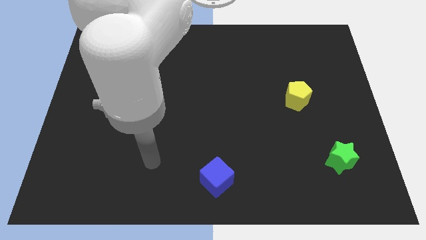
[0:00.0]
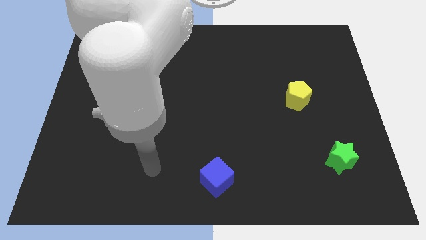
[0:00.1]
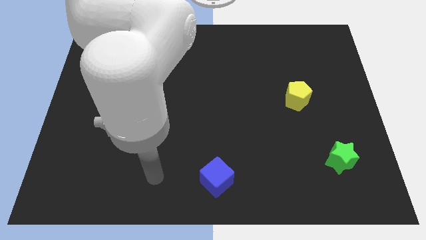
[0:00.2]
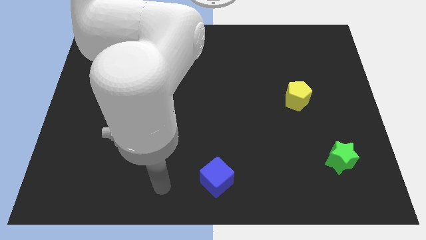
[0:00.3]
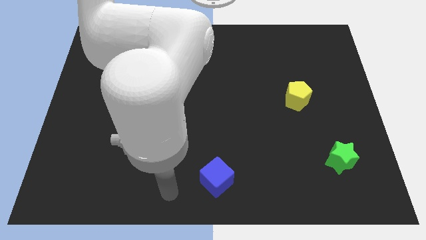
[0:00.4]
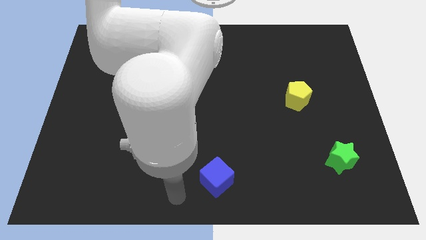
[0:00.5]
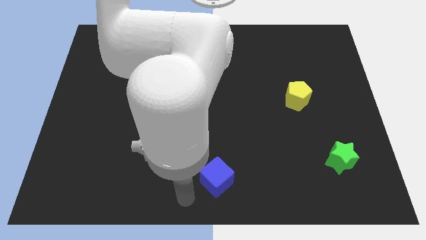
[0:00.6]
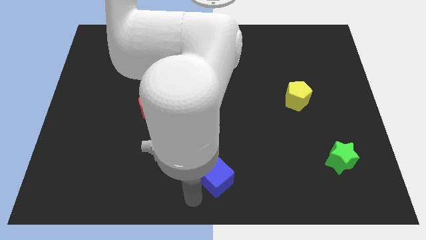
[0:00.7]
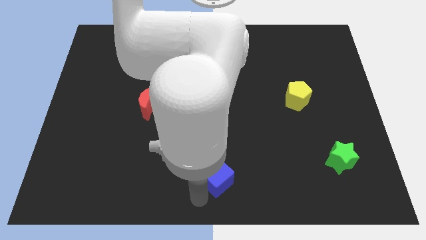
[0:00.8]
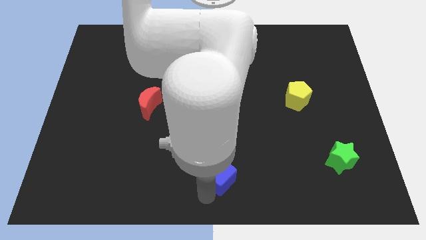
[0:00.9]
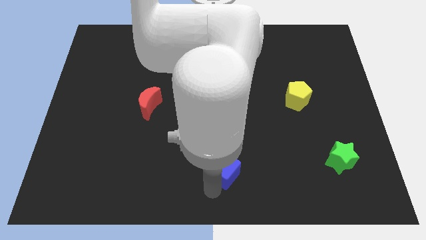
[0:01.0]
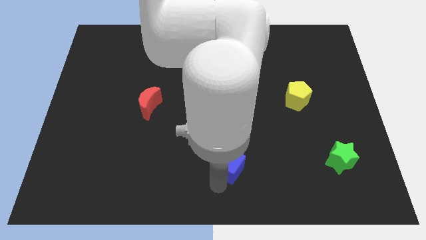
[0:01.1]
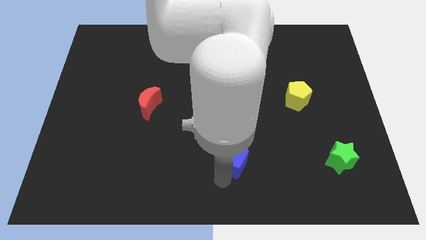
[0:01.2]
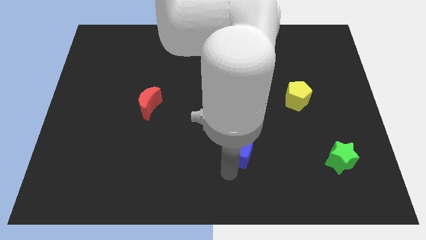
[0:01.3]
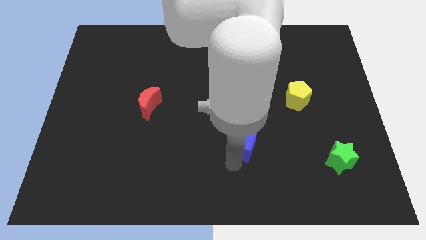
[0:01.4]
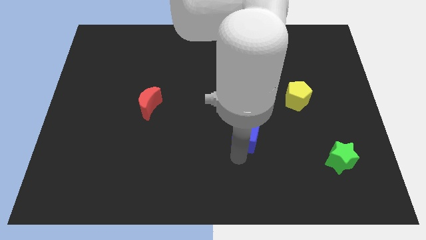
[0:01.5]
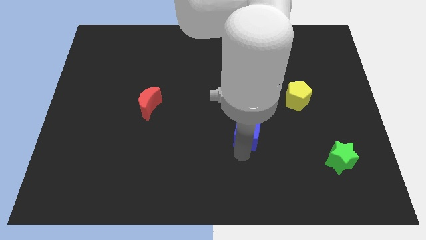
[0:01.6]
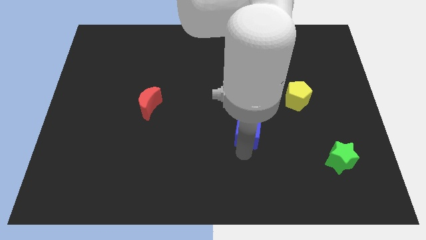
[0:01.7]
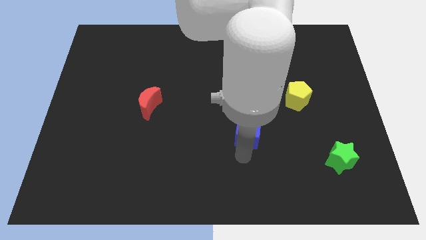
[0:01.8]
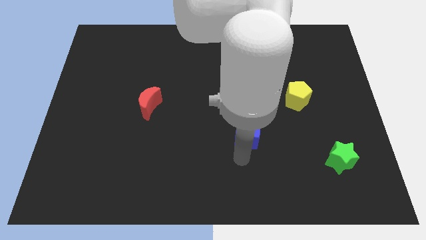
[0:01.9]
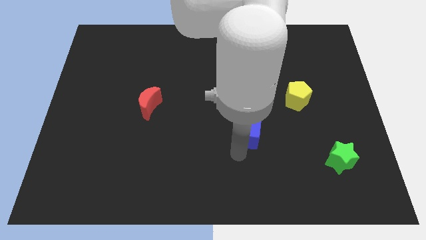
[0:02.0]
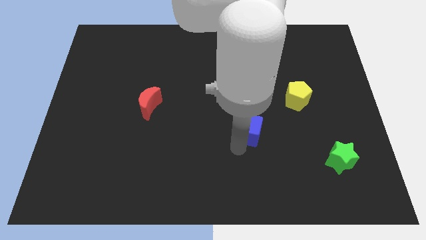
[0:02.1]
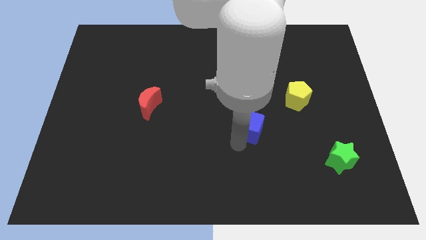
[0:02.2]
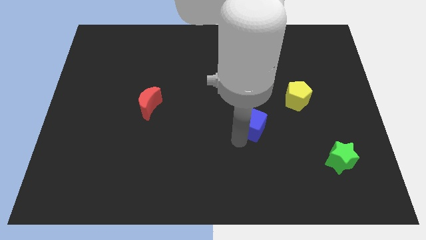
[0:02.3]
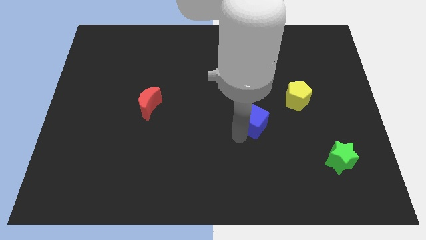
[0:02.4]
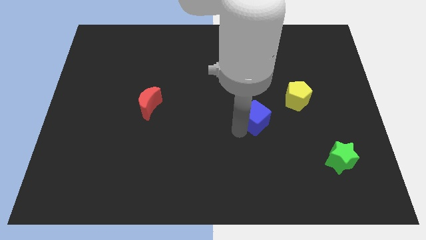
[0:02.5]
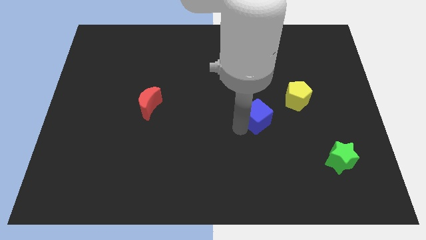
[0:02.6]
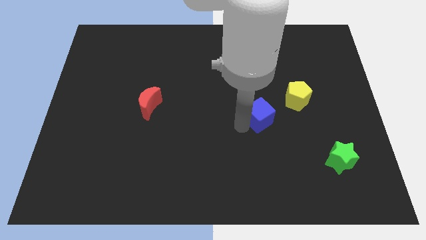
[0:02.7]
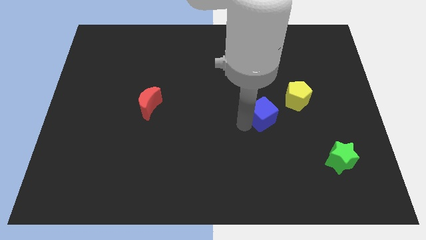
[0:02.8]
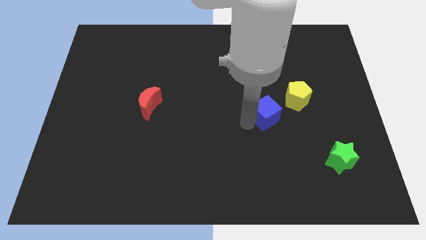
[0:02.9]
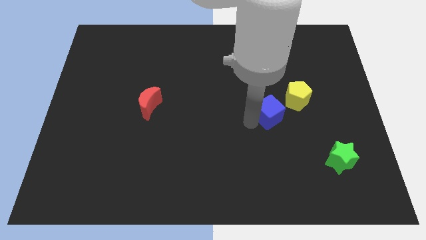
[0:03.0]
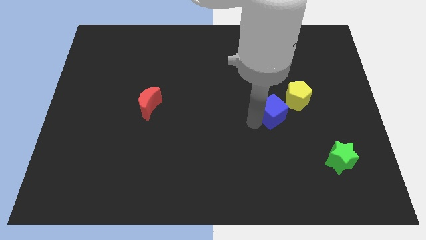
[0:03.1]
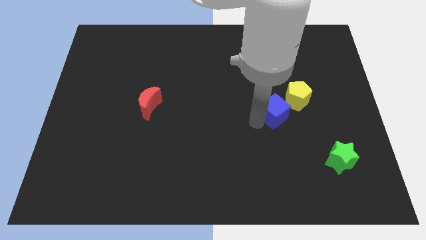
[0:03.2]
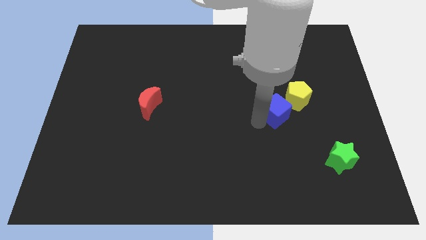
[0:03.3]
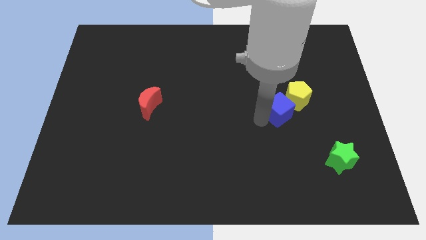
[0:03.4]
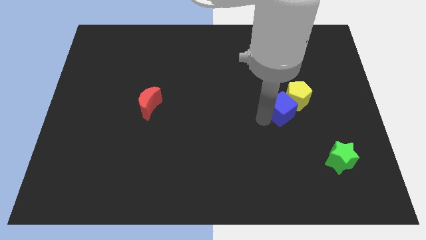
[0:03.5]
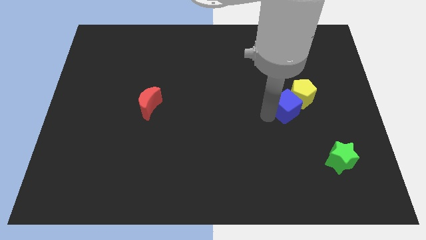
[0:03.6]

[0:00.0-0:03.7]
push the cube to the yellow block

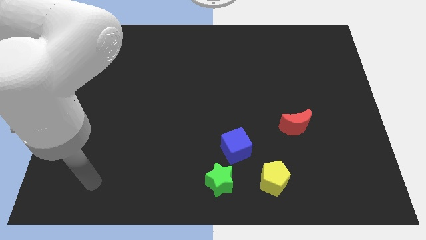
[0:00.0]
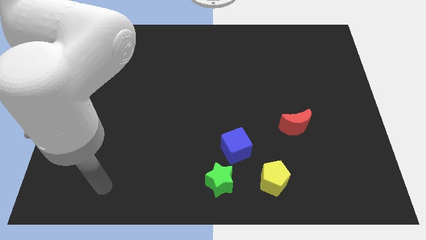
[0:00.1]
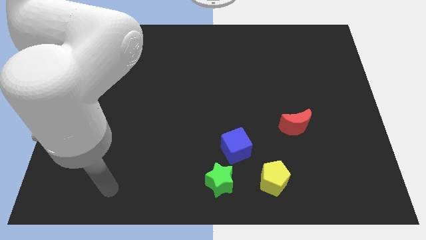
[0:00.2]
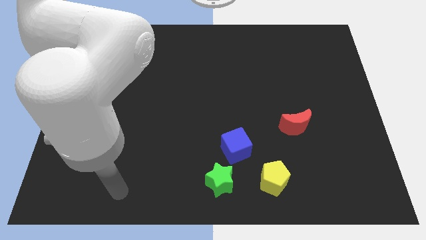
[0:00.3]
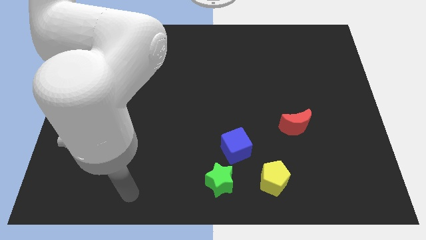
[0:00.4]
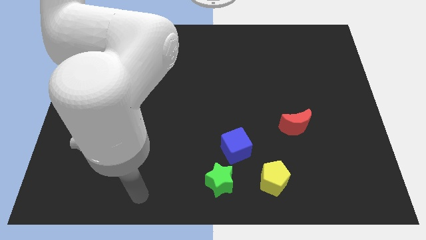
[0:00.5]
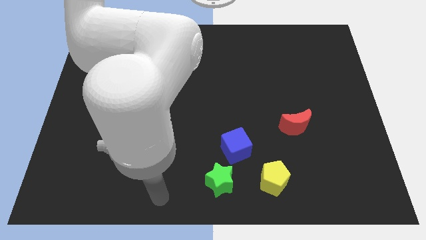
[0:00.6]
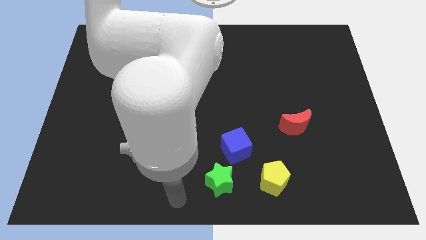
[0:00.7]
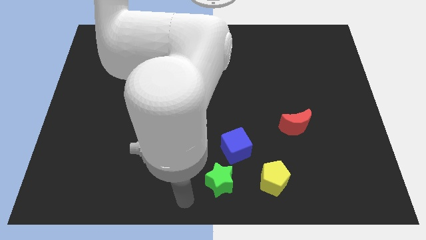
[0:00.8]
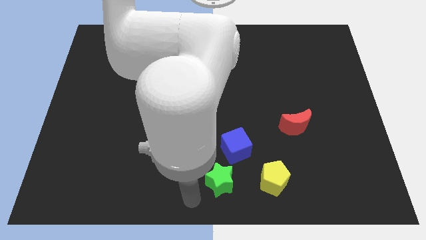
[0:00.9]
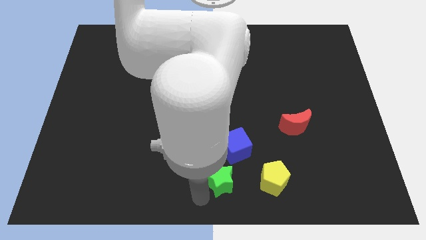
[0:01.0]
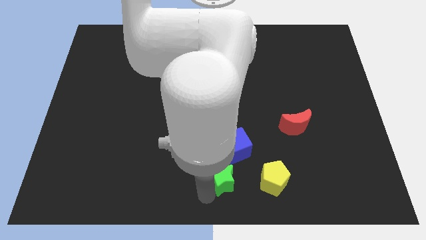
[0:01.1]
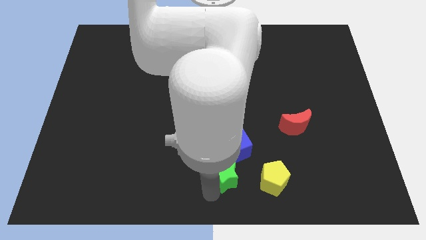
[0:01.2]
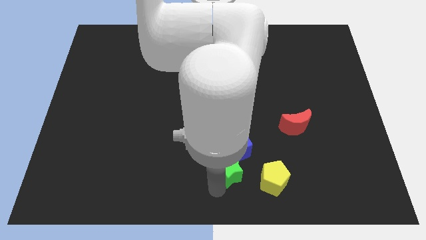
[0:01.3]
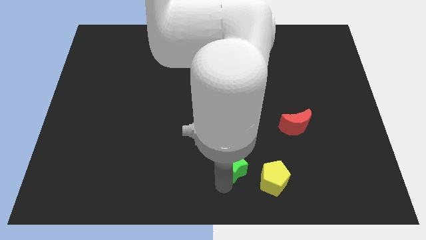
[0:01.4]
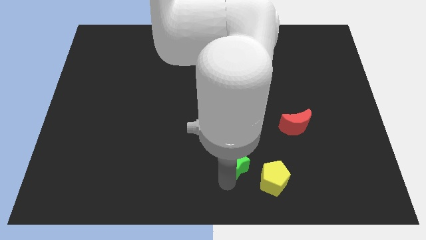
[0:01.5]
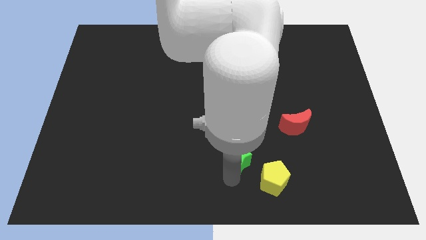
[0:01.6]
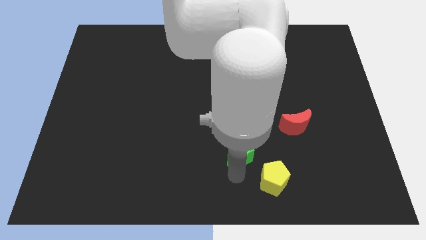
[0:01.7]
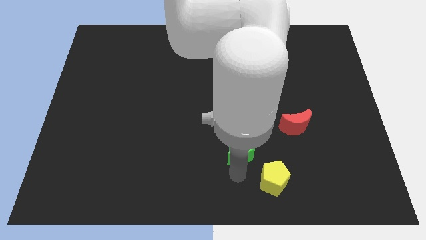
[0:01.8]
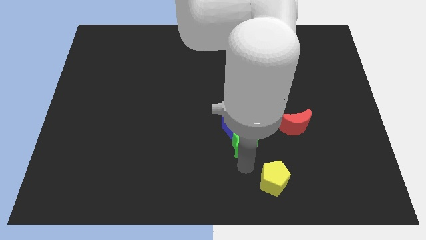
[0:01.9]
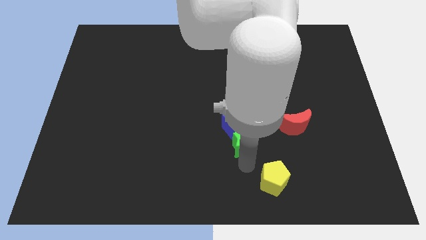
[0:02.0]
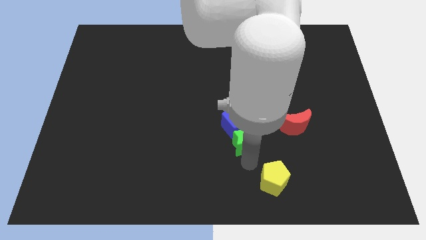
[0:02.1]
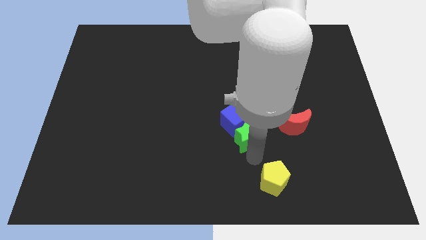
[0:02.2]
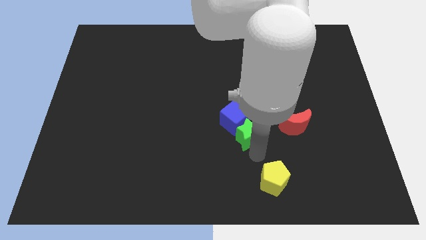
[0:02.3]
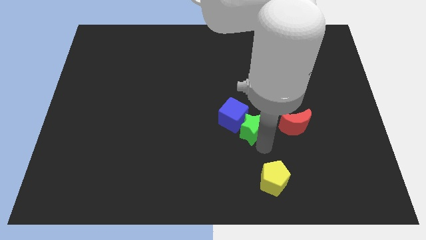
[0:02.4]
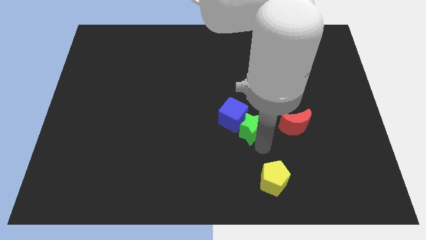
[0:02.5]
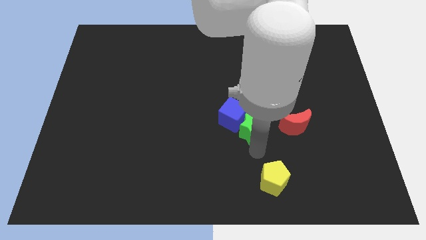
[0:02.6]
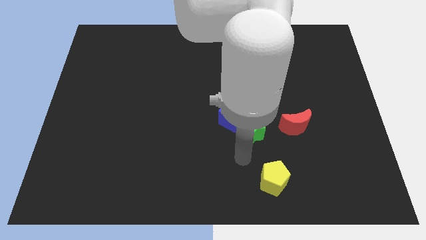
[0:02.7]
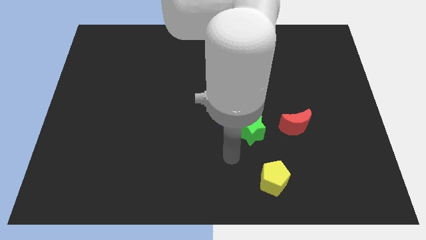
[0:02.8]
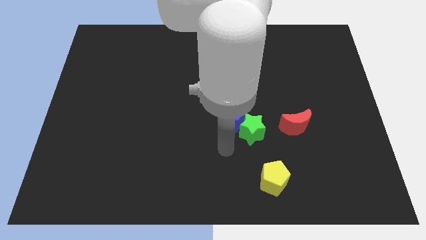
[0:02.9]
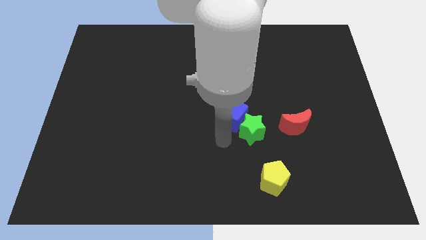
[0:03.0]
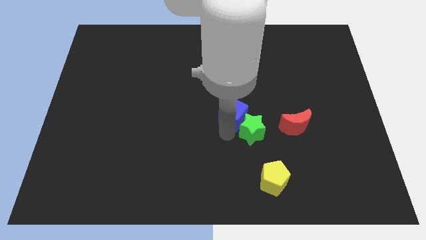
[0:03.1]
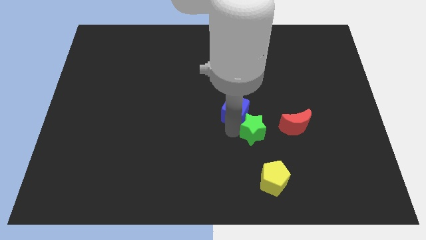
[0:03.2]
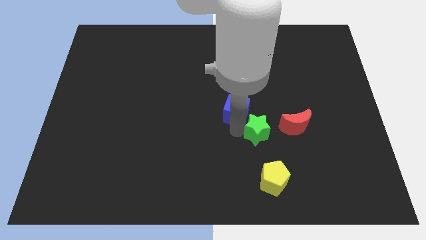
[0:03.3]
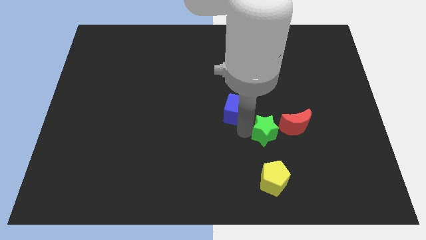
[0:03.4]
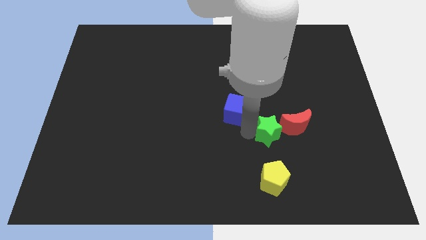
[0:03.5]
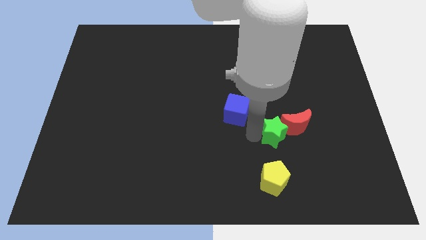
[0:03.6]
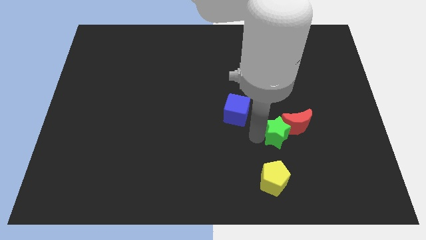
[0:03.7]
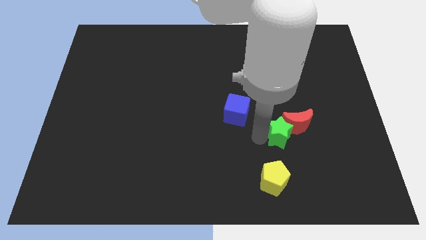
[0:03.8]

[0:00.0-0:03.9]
put the star close to the moon

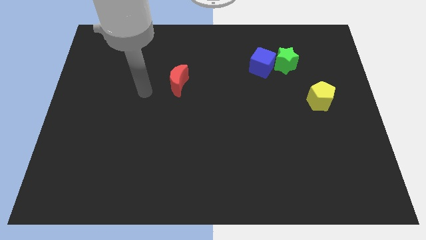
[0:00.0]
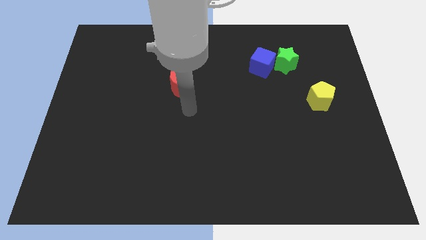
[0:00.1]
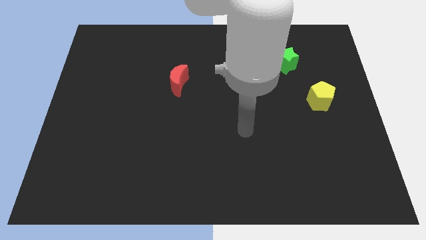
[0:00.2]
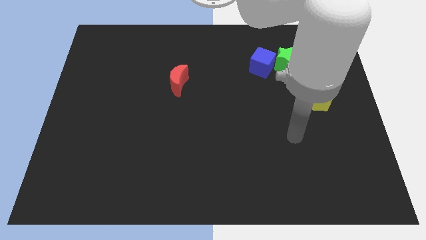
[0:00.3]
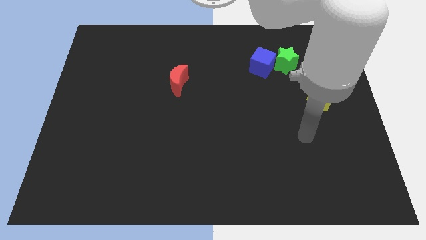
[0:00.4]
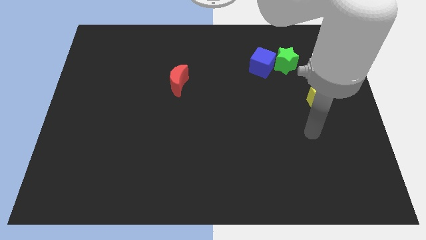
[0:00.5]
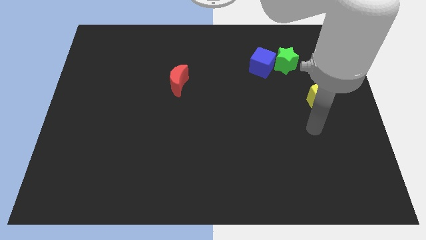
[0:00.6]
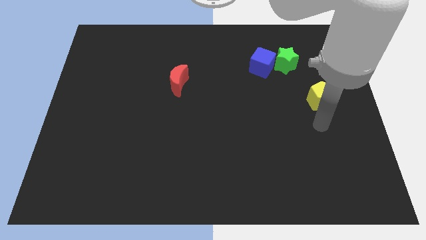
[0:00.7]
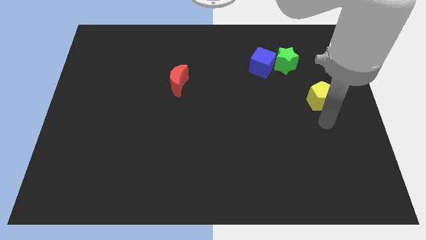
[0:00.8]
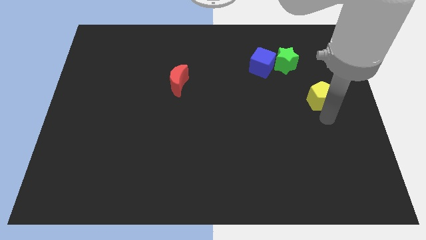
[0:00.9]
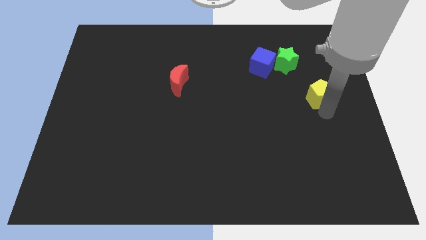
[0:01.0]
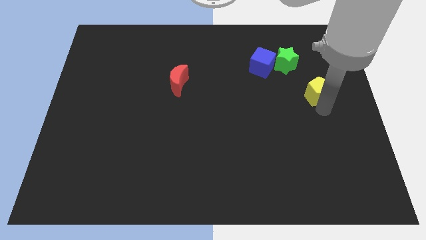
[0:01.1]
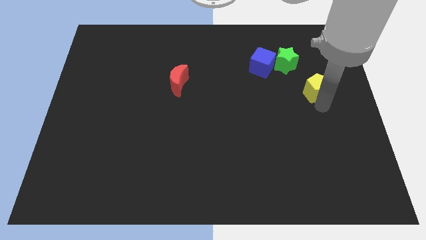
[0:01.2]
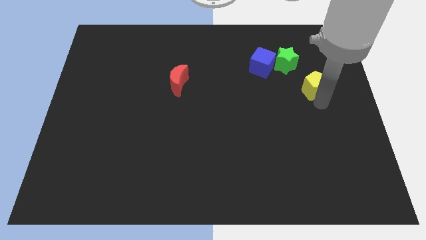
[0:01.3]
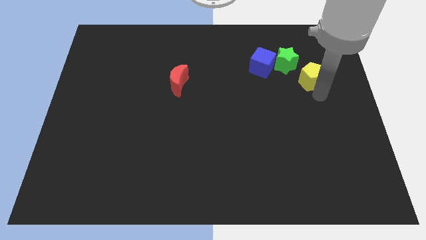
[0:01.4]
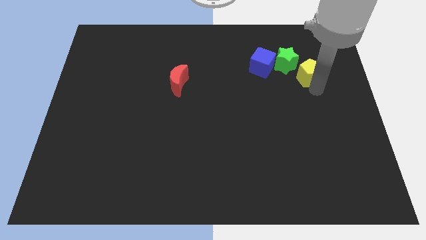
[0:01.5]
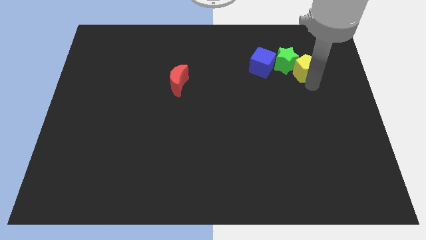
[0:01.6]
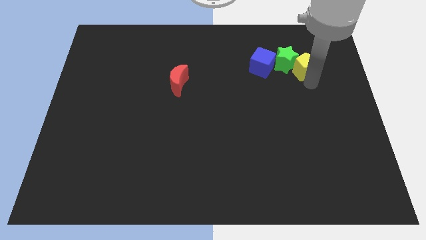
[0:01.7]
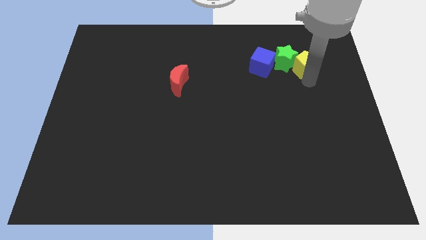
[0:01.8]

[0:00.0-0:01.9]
move the yellow pentagon close to the green star
